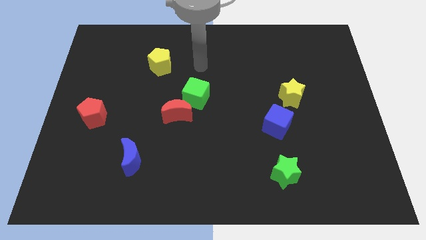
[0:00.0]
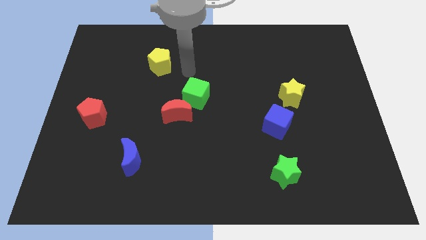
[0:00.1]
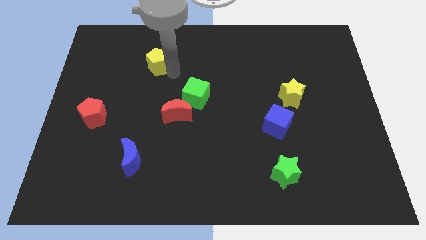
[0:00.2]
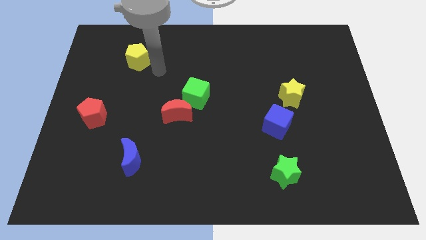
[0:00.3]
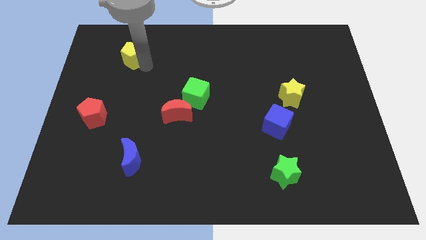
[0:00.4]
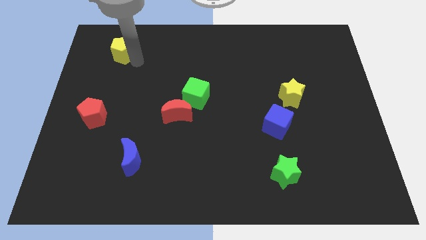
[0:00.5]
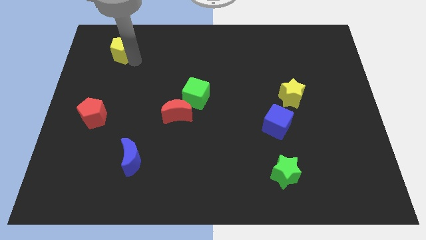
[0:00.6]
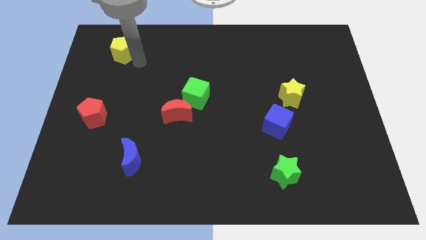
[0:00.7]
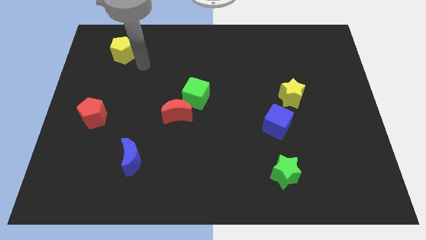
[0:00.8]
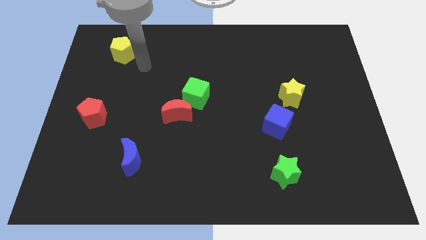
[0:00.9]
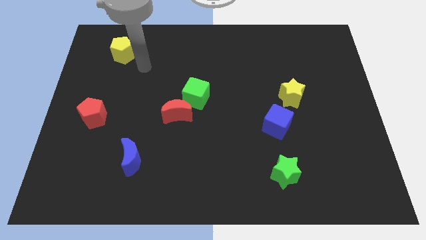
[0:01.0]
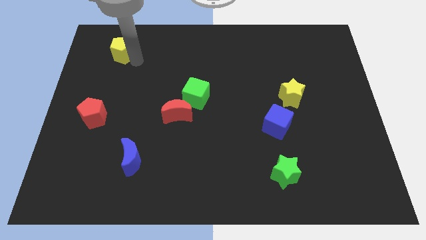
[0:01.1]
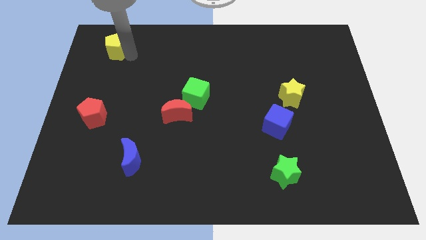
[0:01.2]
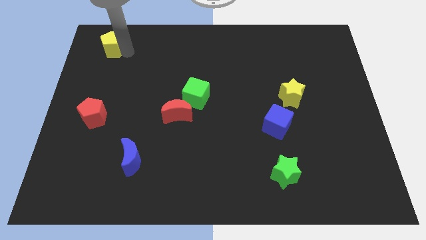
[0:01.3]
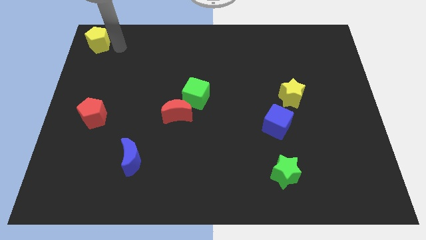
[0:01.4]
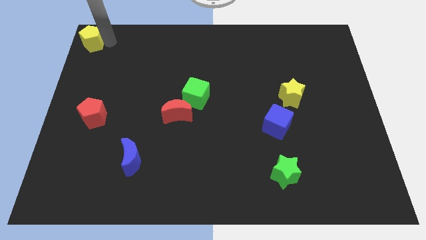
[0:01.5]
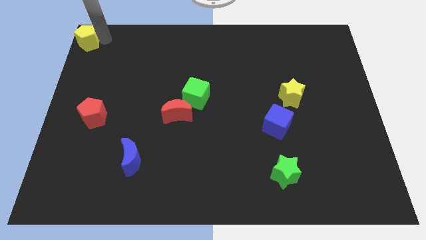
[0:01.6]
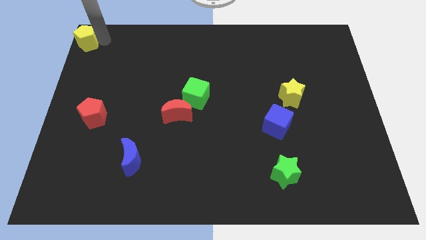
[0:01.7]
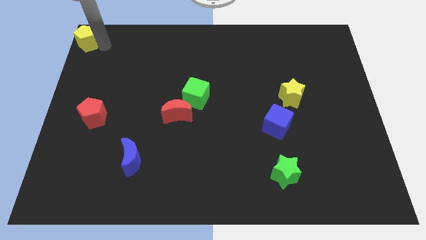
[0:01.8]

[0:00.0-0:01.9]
push the yellow pentagon to the top left to the board

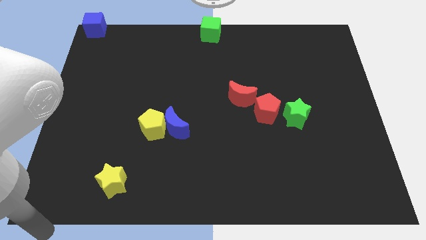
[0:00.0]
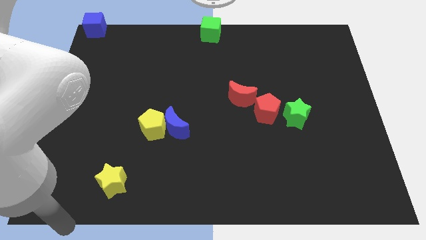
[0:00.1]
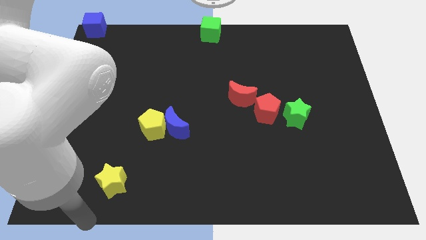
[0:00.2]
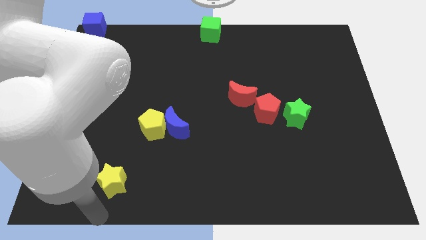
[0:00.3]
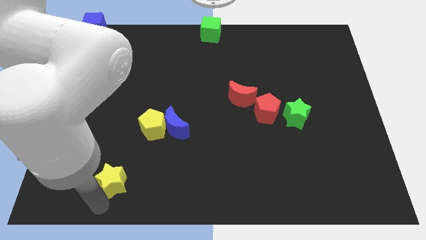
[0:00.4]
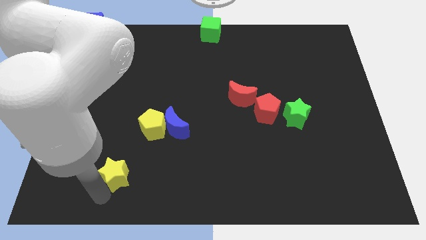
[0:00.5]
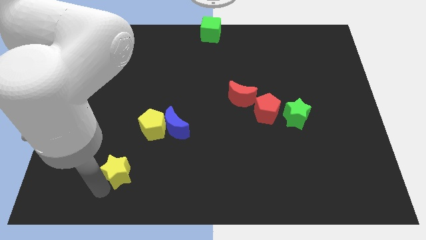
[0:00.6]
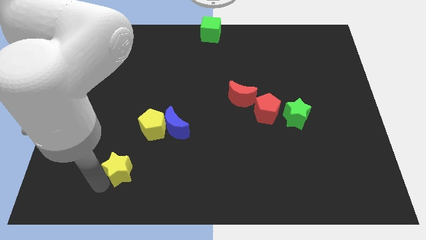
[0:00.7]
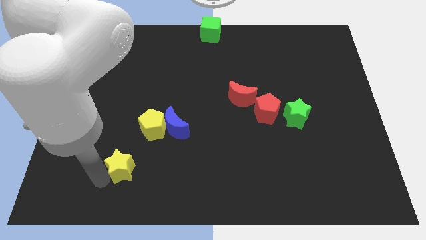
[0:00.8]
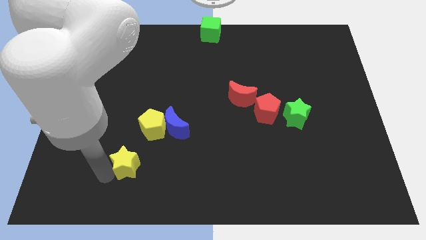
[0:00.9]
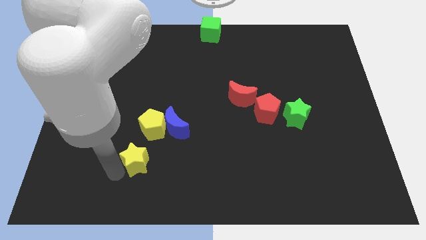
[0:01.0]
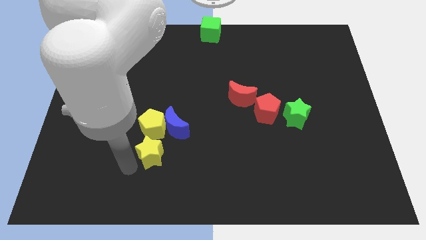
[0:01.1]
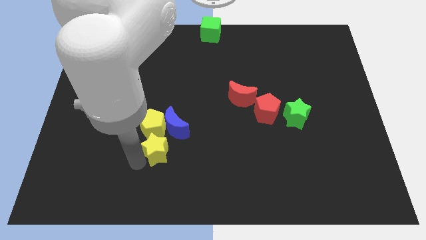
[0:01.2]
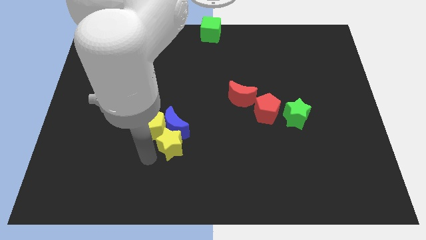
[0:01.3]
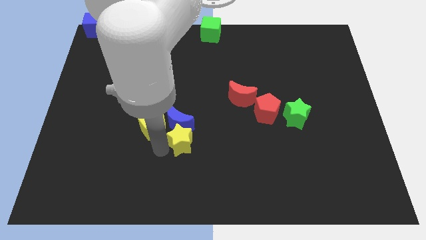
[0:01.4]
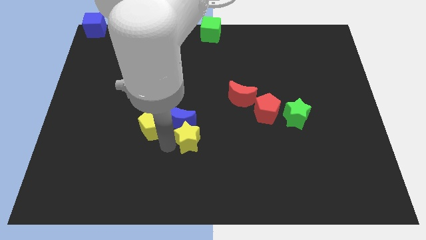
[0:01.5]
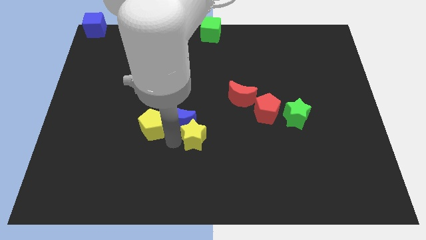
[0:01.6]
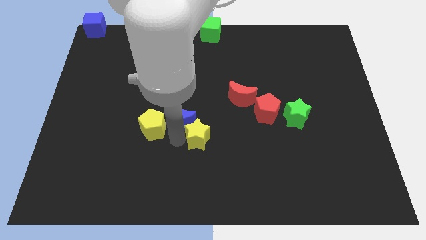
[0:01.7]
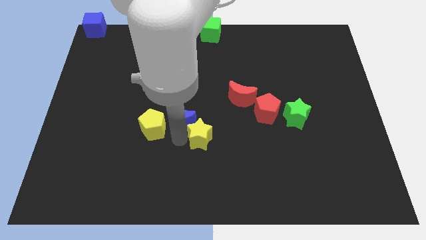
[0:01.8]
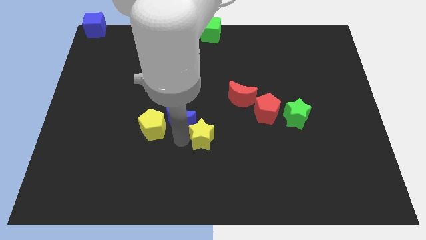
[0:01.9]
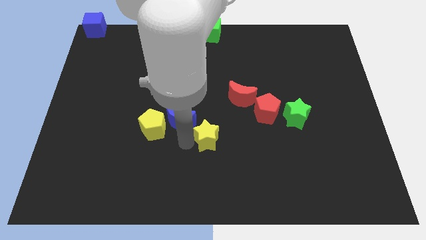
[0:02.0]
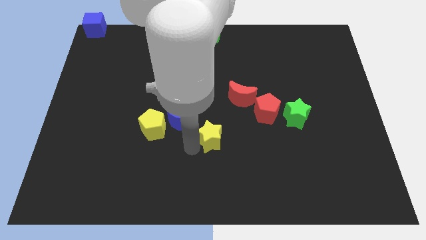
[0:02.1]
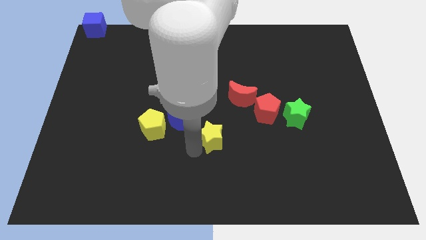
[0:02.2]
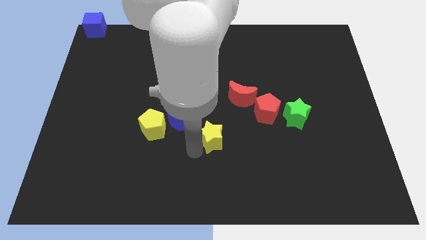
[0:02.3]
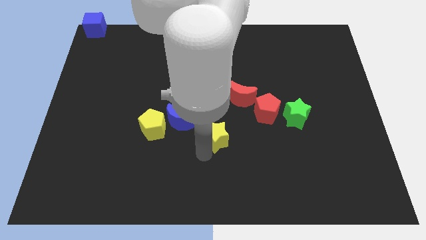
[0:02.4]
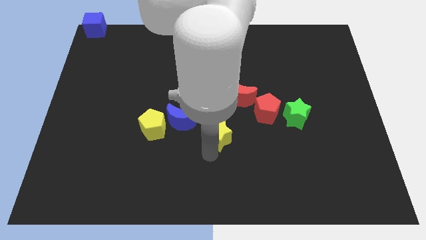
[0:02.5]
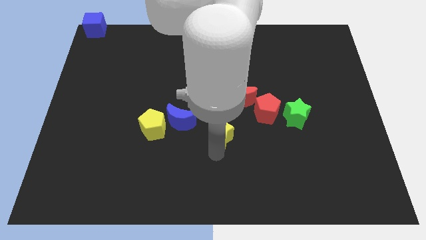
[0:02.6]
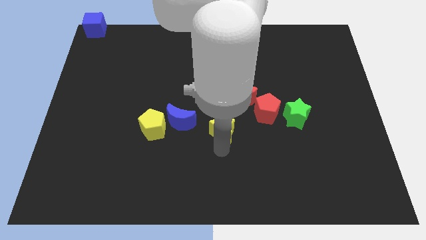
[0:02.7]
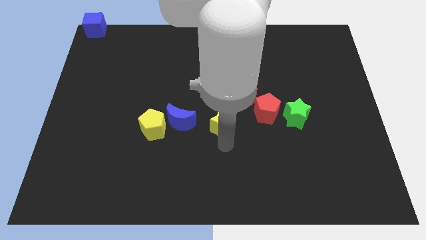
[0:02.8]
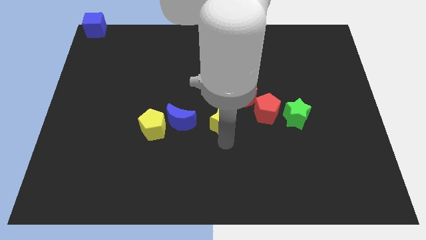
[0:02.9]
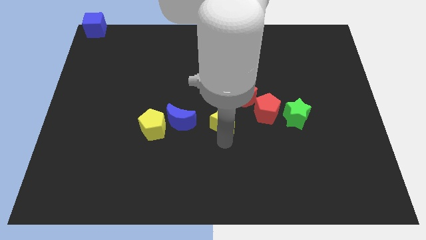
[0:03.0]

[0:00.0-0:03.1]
move the yellow star to the horizontal right side of the blue moon

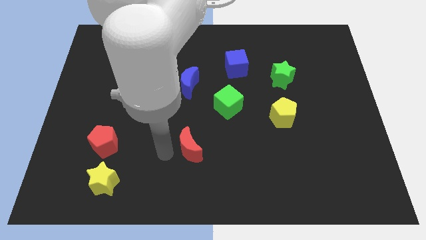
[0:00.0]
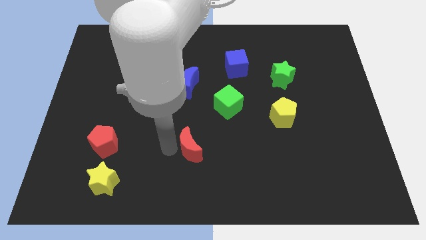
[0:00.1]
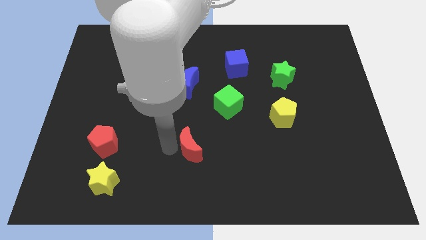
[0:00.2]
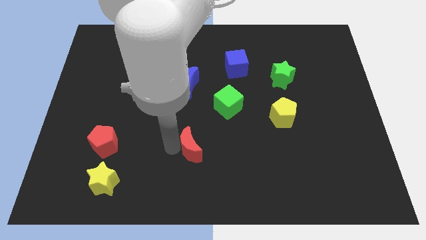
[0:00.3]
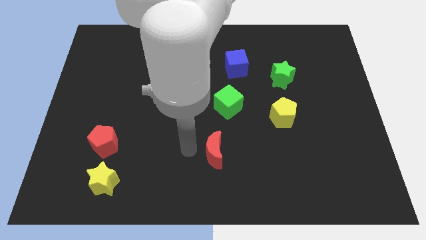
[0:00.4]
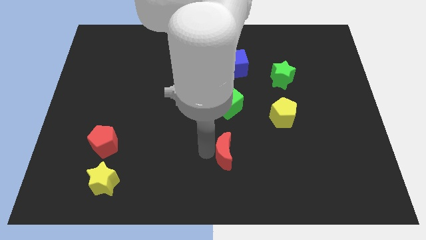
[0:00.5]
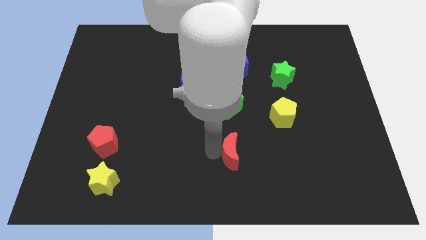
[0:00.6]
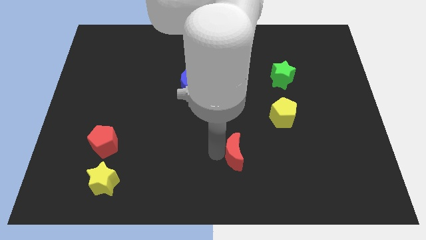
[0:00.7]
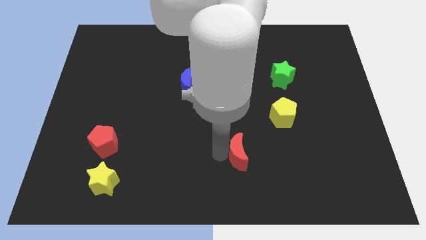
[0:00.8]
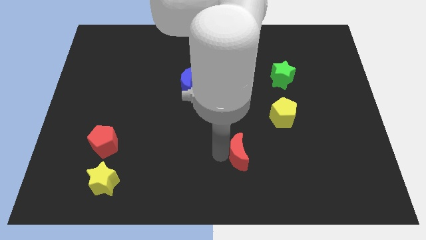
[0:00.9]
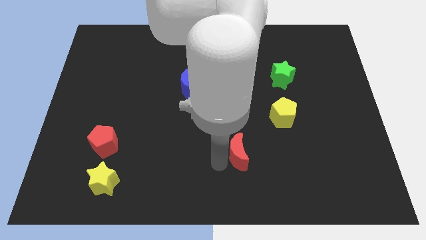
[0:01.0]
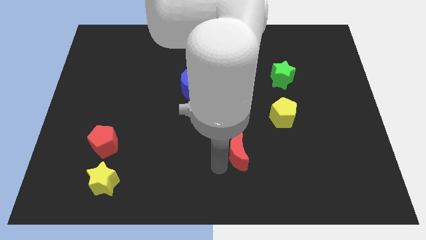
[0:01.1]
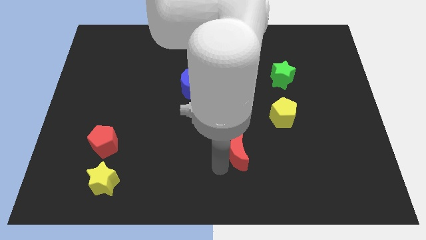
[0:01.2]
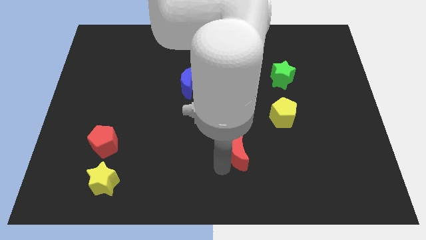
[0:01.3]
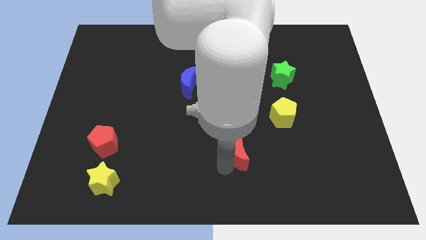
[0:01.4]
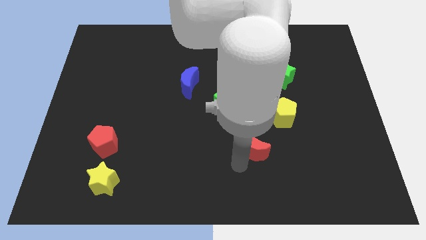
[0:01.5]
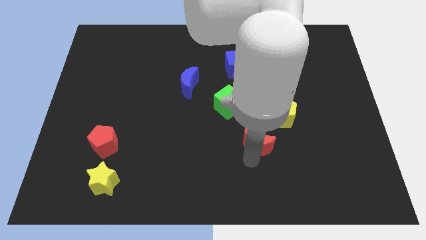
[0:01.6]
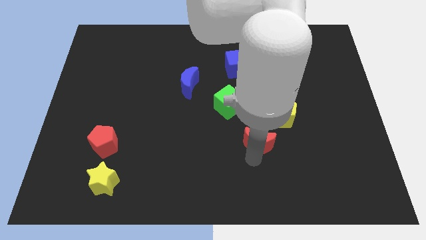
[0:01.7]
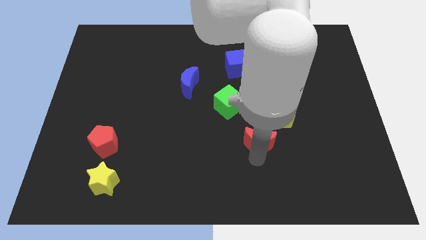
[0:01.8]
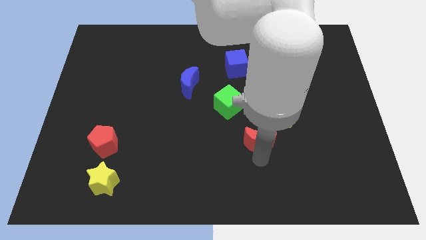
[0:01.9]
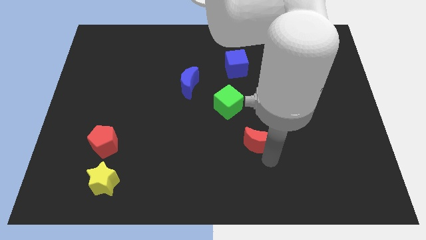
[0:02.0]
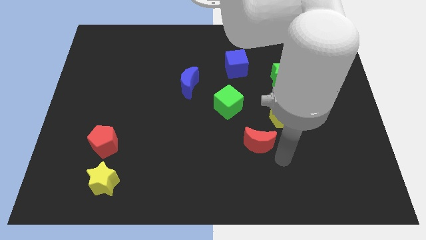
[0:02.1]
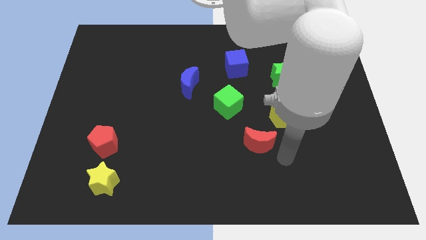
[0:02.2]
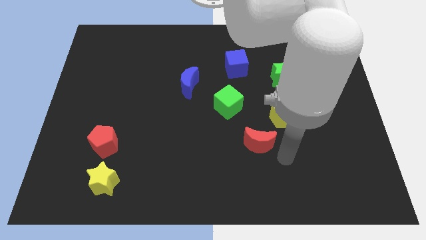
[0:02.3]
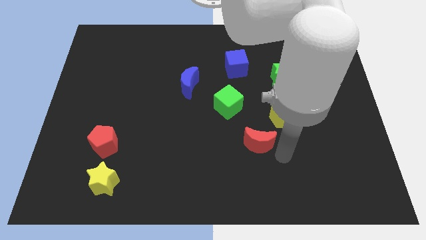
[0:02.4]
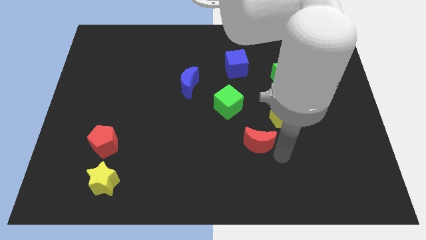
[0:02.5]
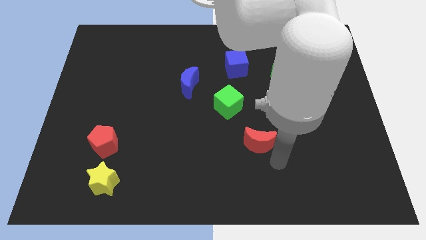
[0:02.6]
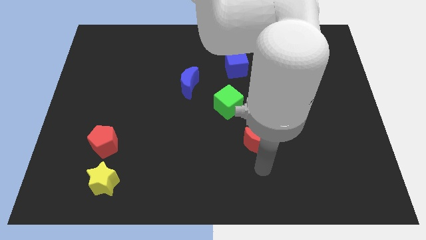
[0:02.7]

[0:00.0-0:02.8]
push the red crescent to its right towards the yellow pentagon

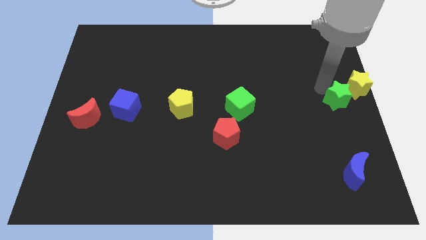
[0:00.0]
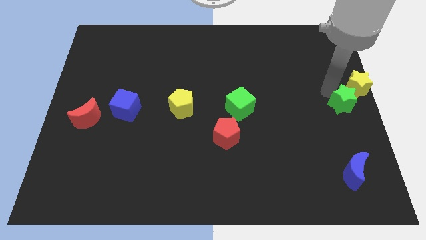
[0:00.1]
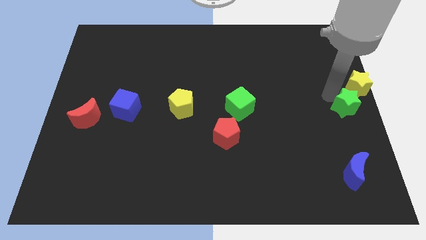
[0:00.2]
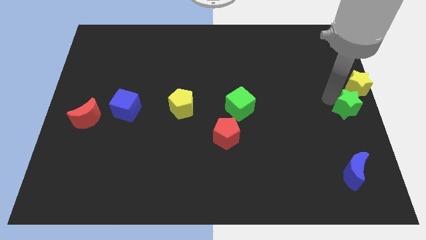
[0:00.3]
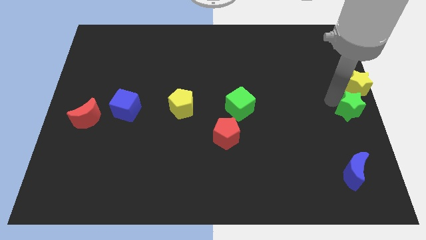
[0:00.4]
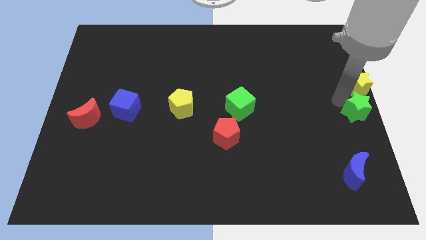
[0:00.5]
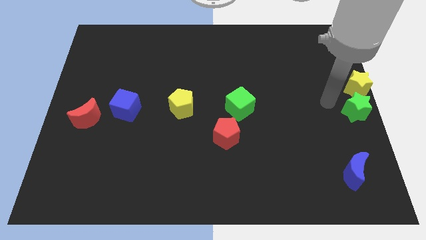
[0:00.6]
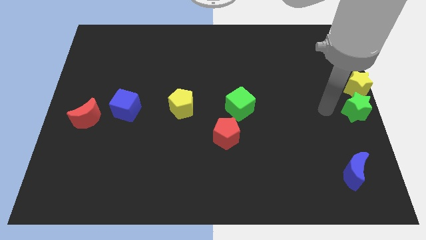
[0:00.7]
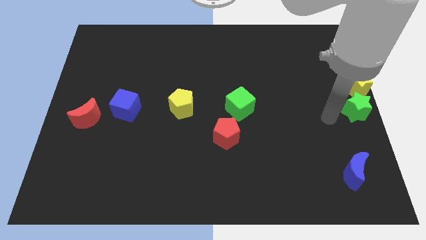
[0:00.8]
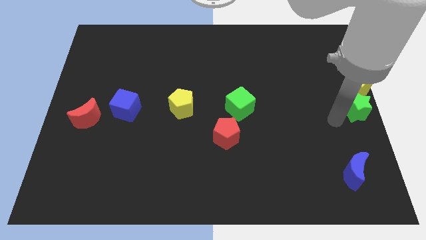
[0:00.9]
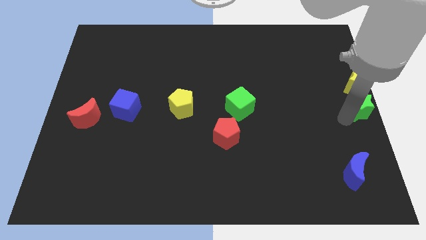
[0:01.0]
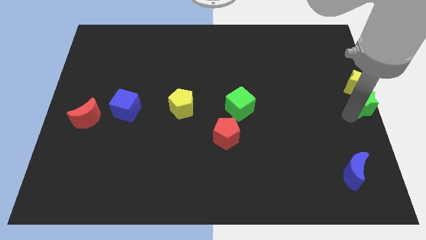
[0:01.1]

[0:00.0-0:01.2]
place the green star below the yellow star

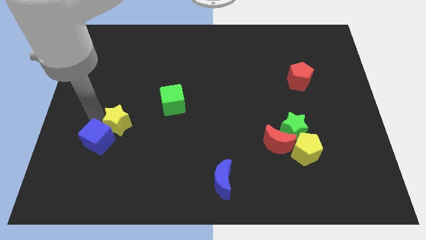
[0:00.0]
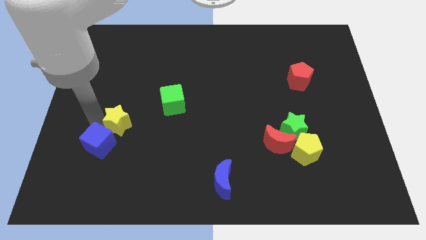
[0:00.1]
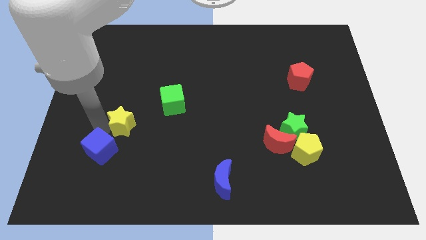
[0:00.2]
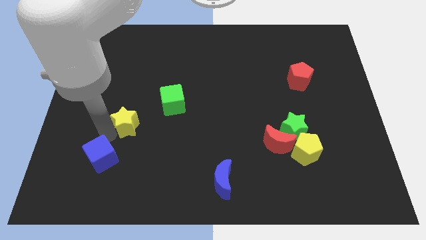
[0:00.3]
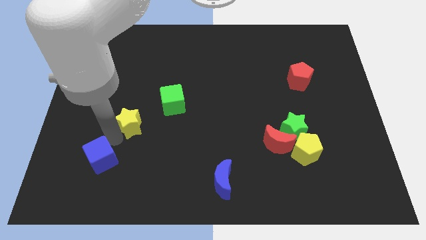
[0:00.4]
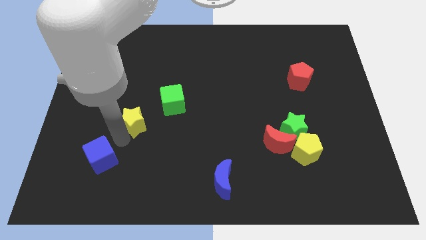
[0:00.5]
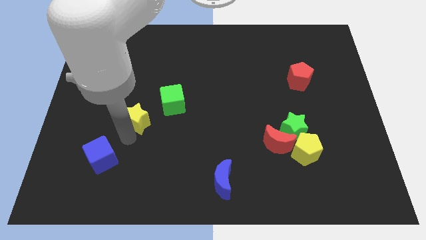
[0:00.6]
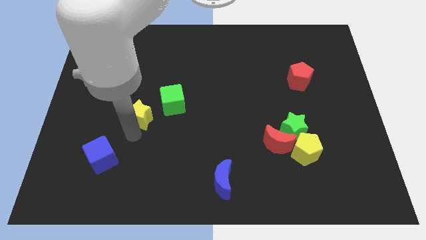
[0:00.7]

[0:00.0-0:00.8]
separate the yellow star from the blue cube
